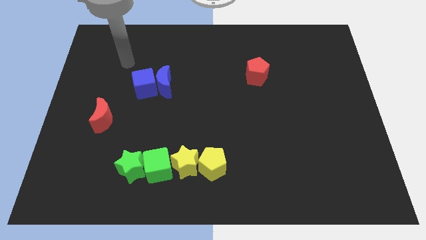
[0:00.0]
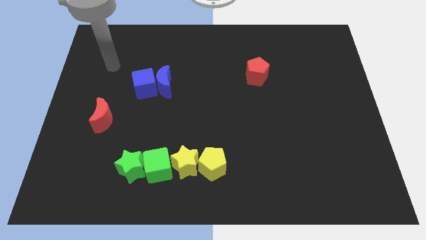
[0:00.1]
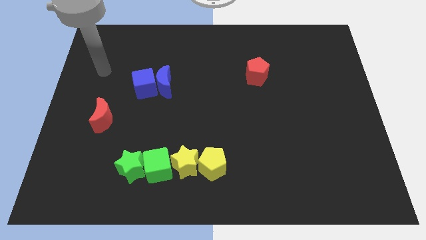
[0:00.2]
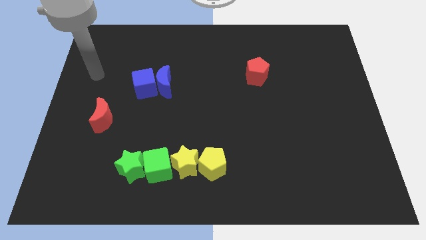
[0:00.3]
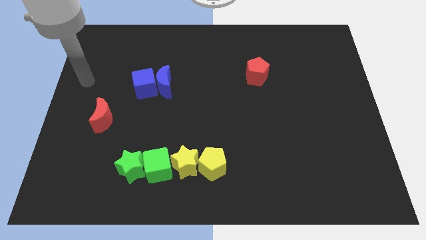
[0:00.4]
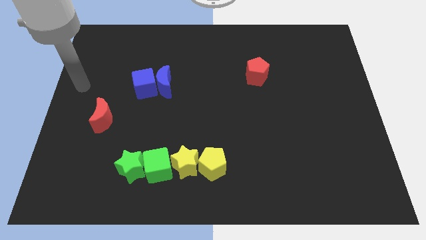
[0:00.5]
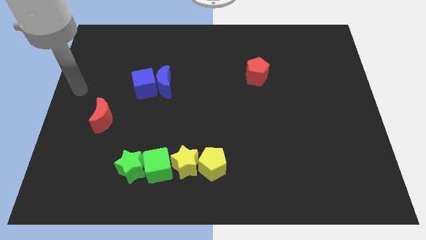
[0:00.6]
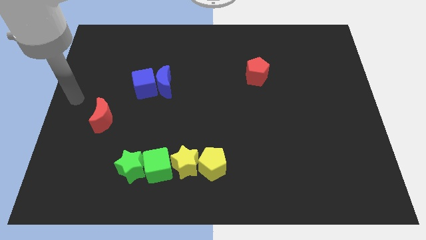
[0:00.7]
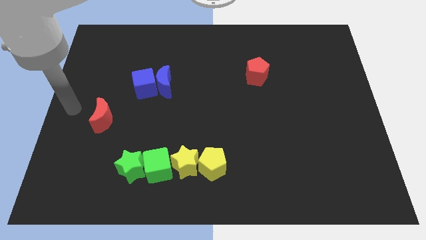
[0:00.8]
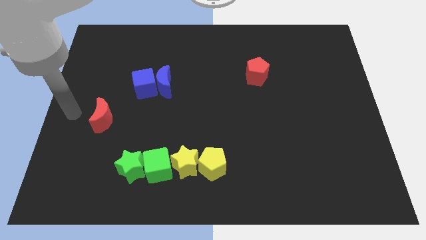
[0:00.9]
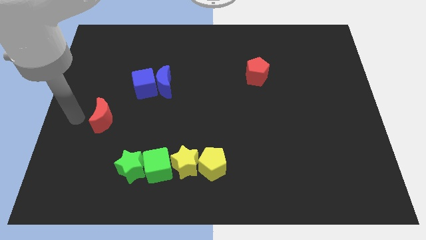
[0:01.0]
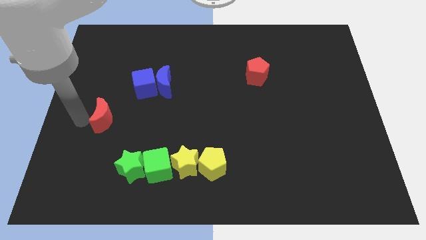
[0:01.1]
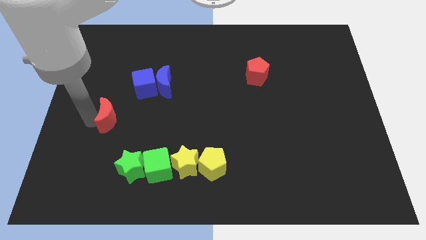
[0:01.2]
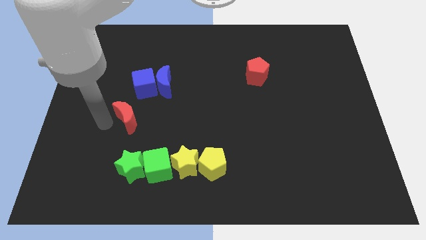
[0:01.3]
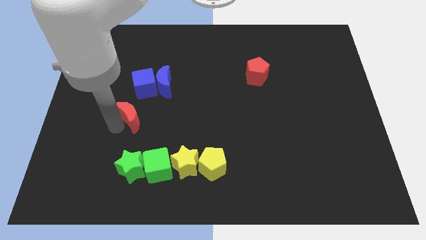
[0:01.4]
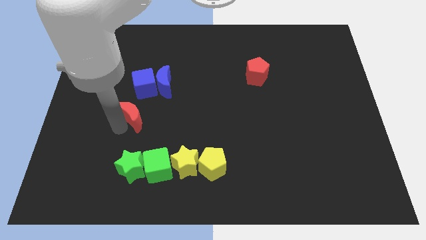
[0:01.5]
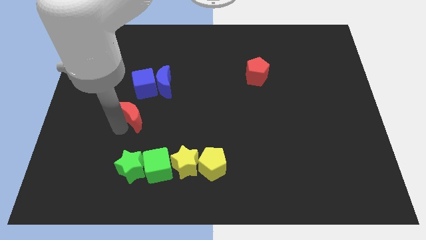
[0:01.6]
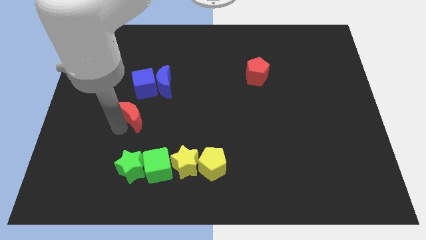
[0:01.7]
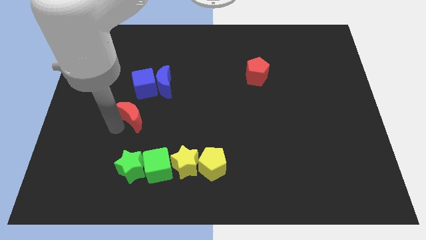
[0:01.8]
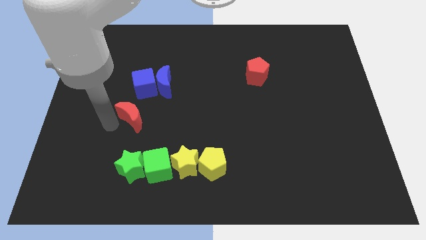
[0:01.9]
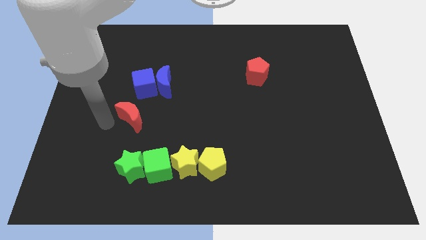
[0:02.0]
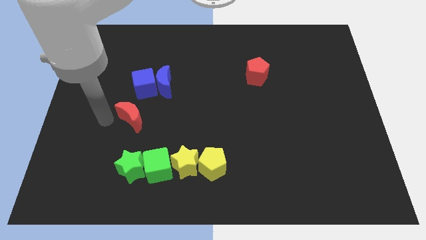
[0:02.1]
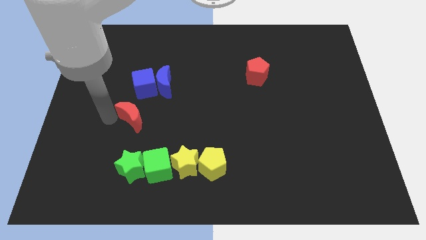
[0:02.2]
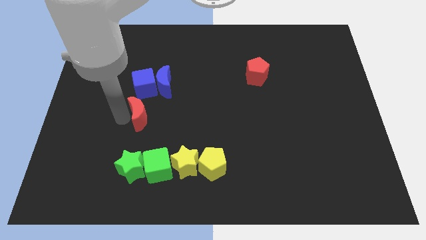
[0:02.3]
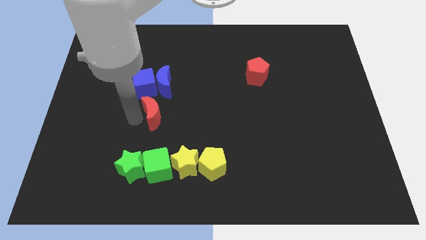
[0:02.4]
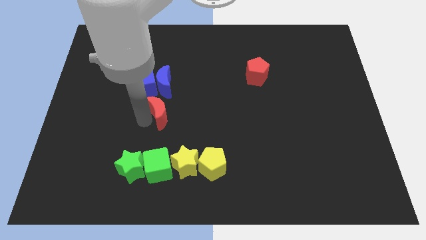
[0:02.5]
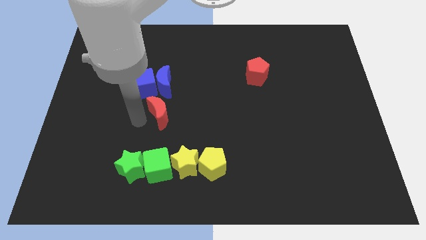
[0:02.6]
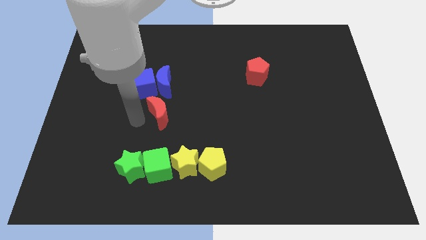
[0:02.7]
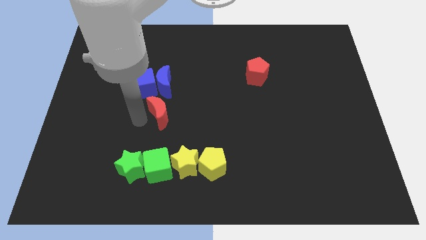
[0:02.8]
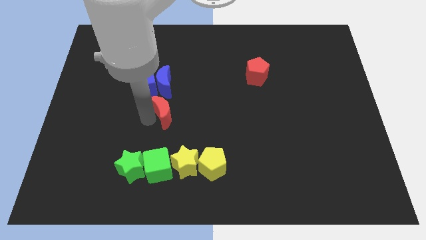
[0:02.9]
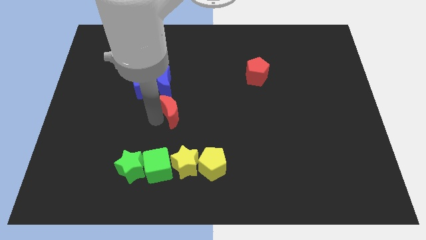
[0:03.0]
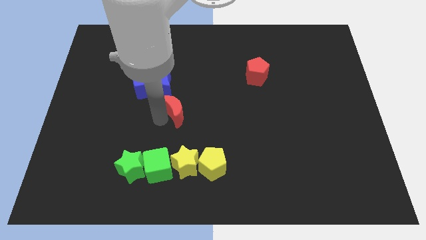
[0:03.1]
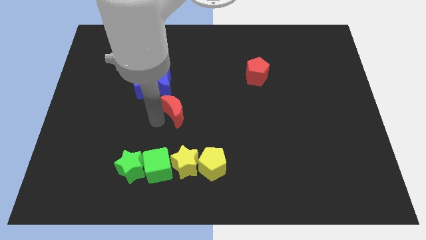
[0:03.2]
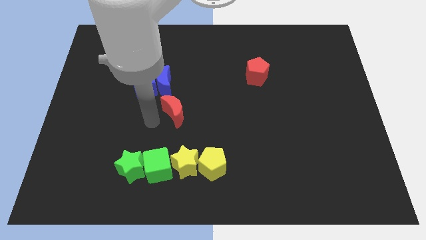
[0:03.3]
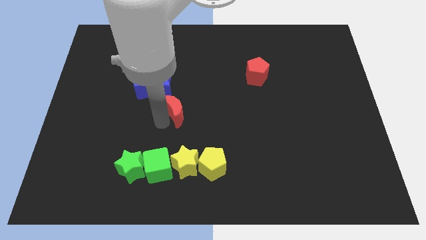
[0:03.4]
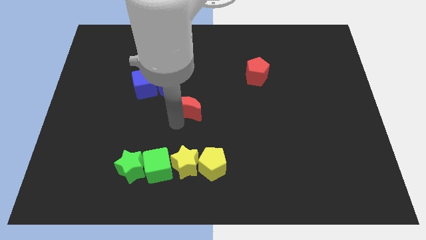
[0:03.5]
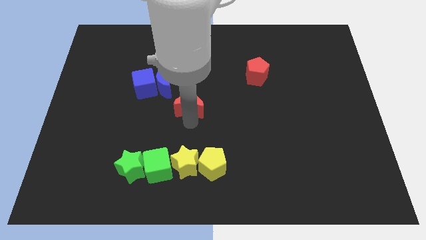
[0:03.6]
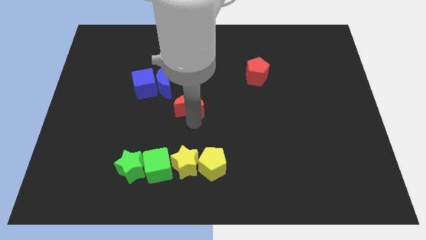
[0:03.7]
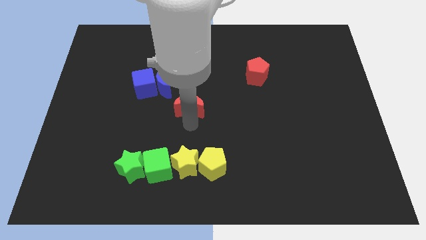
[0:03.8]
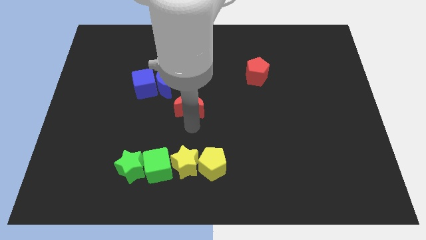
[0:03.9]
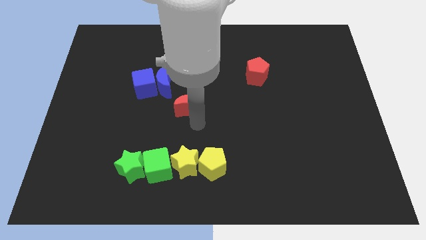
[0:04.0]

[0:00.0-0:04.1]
place the red moon above the yellow star

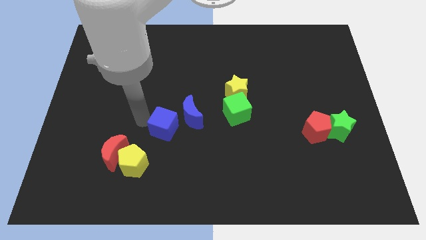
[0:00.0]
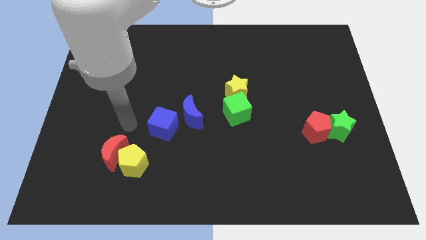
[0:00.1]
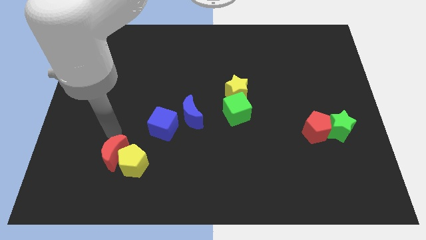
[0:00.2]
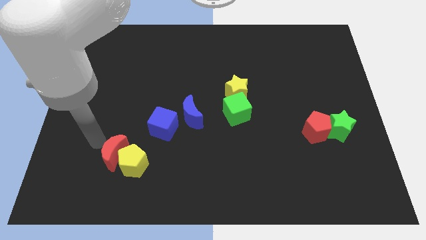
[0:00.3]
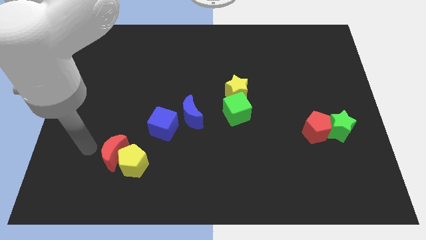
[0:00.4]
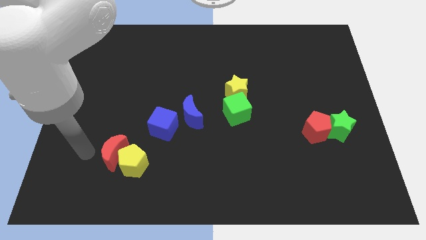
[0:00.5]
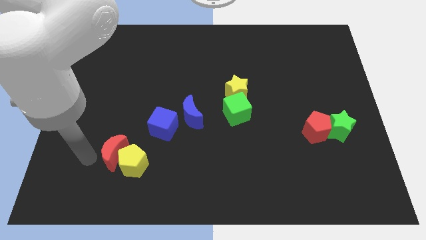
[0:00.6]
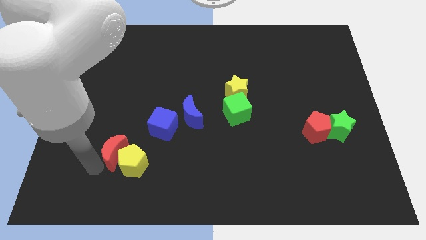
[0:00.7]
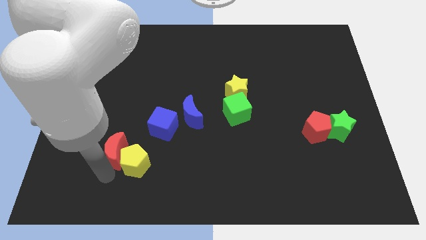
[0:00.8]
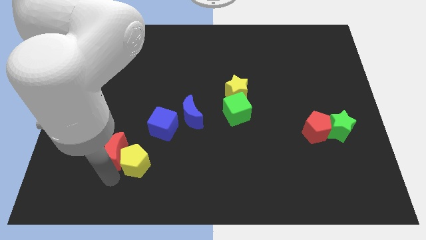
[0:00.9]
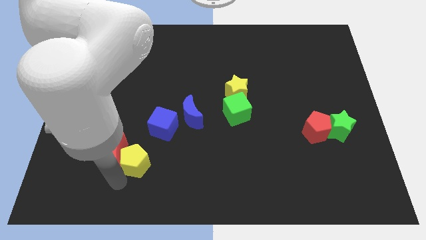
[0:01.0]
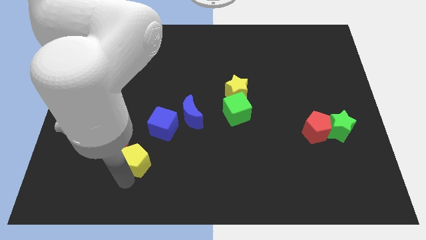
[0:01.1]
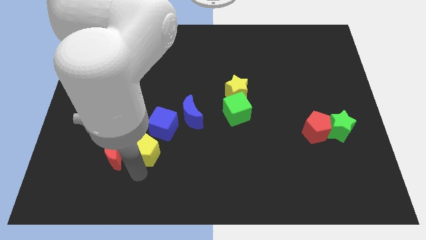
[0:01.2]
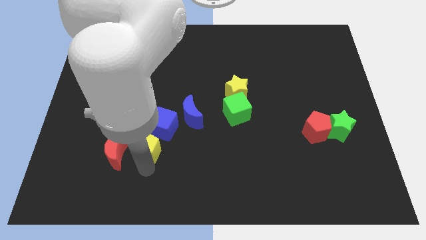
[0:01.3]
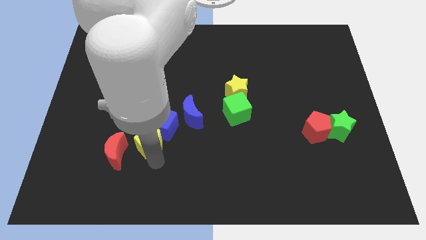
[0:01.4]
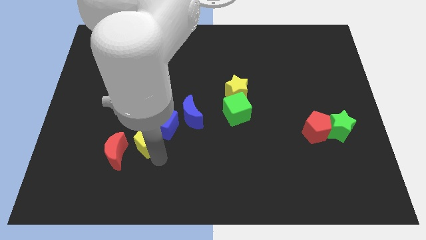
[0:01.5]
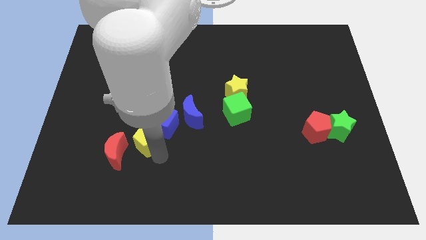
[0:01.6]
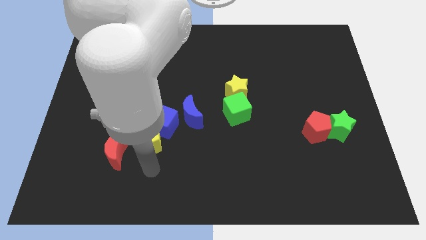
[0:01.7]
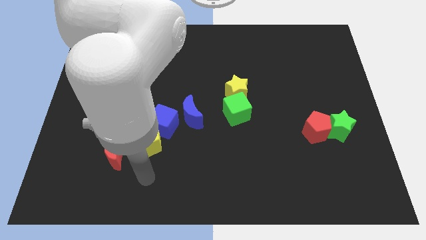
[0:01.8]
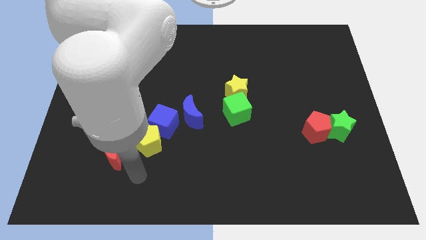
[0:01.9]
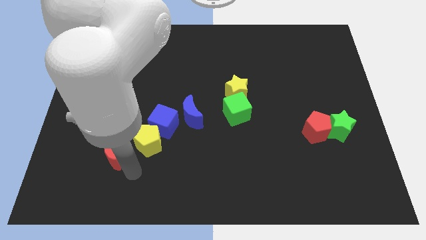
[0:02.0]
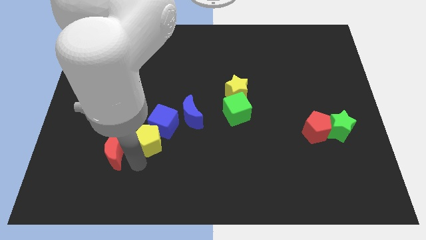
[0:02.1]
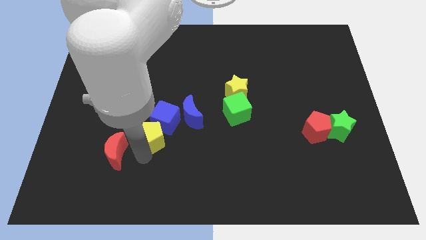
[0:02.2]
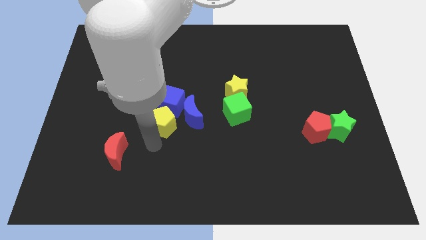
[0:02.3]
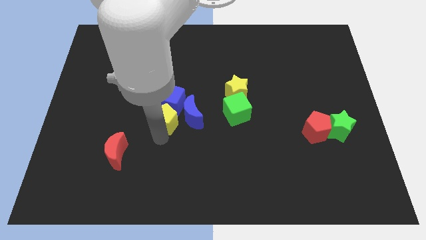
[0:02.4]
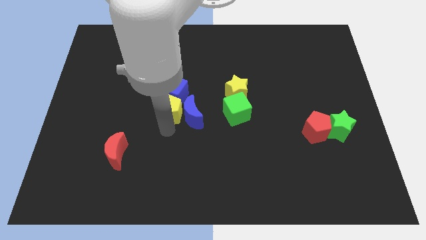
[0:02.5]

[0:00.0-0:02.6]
push the yellow pentagon to the left of the blue crescent

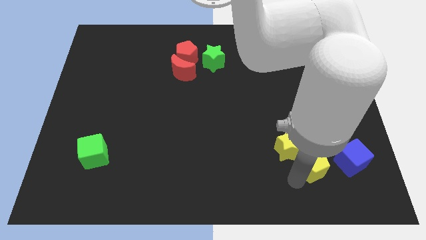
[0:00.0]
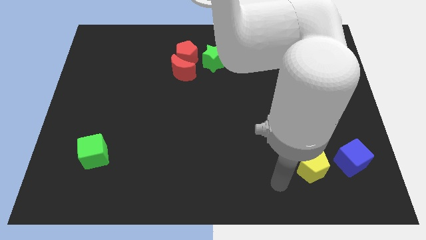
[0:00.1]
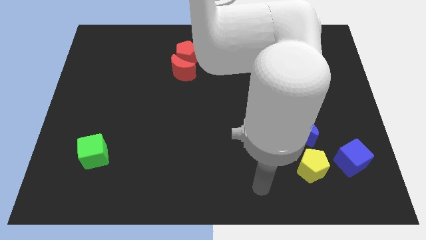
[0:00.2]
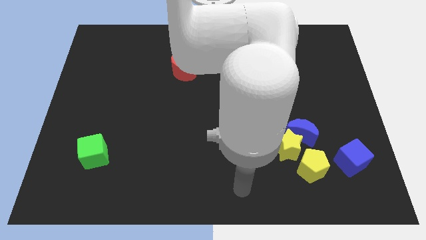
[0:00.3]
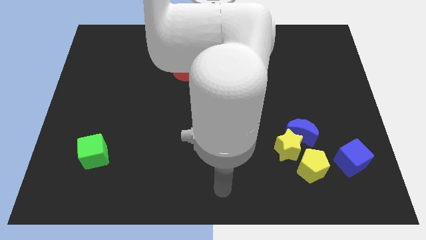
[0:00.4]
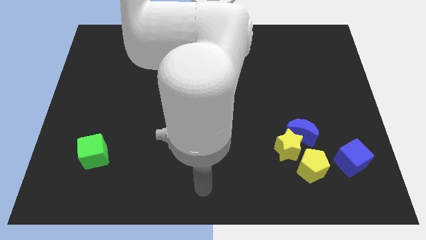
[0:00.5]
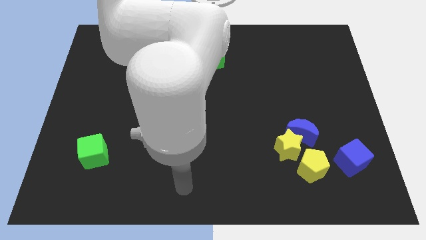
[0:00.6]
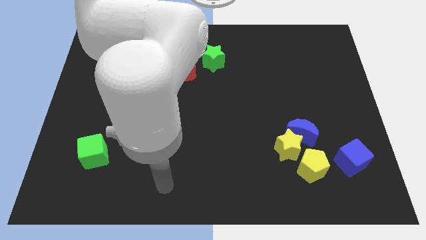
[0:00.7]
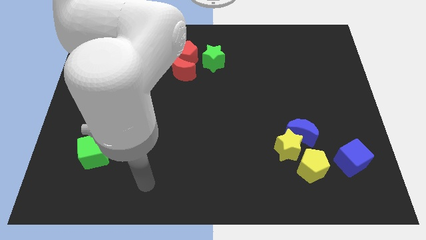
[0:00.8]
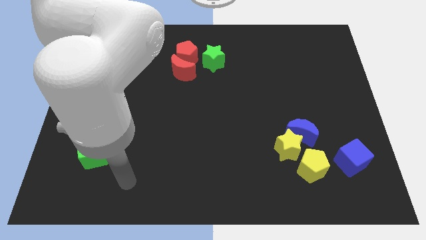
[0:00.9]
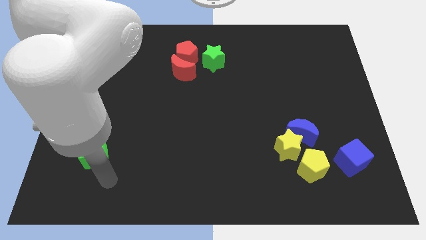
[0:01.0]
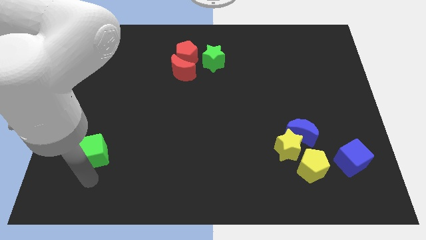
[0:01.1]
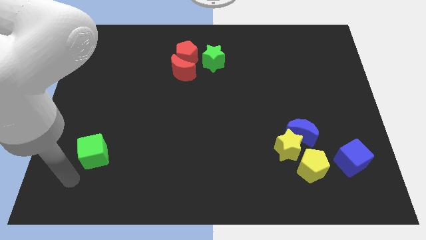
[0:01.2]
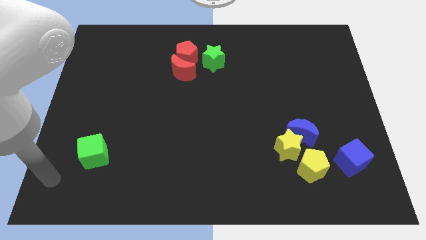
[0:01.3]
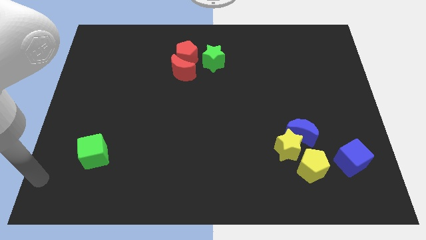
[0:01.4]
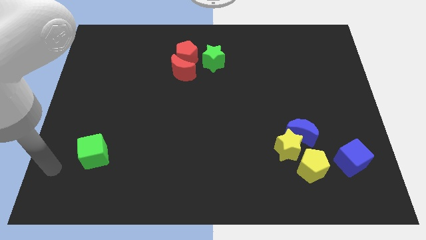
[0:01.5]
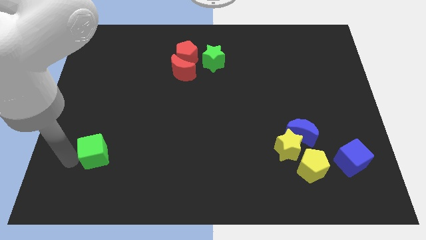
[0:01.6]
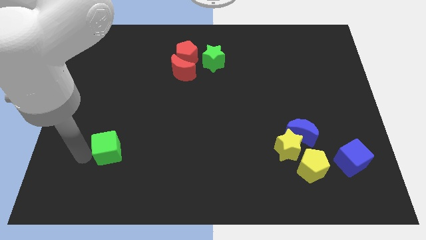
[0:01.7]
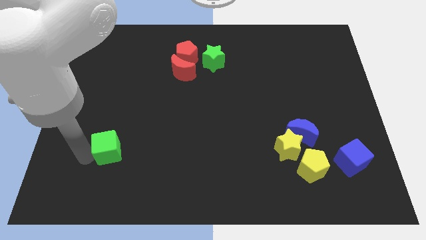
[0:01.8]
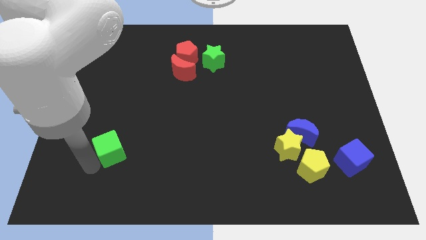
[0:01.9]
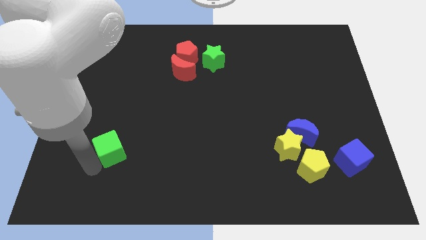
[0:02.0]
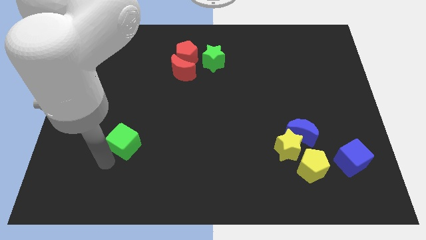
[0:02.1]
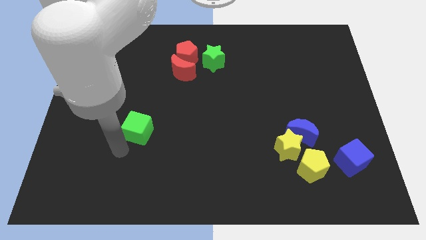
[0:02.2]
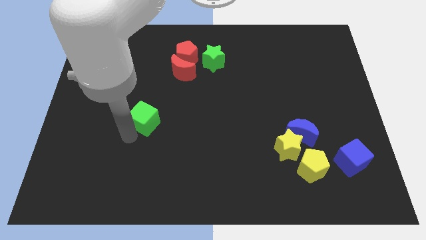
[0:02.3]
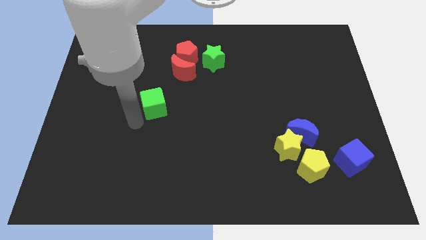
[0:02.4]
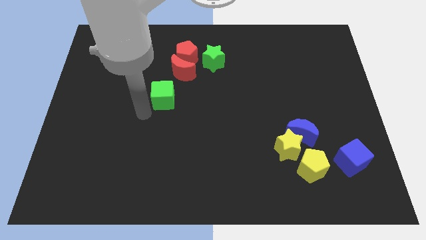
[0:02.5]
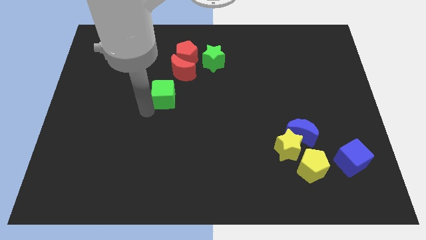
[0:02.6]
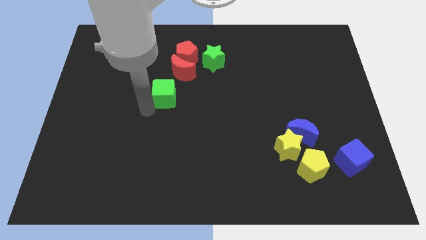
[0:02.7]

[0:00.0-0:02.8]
push the green cube upward
